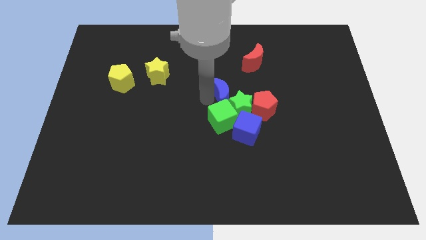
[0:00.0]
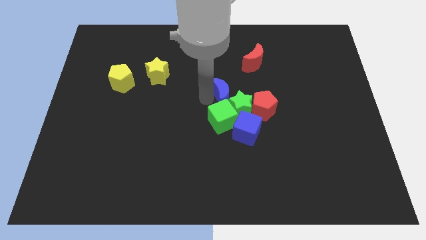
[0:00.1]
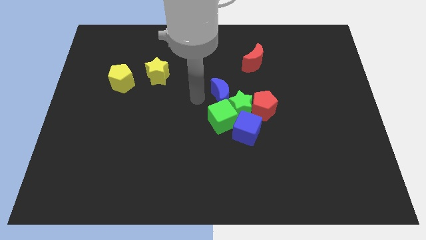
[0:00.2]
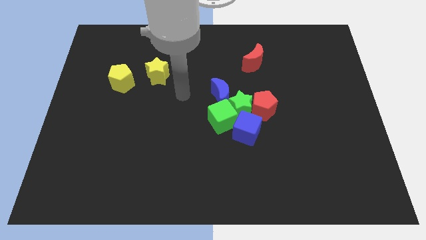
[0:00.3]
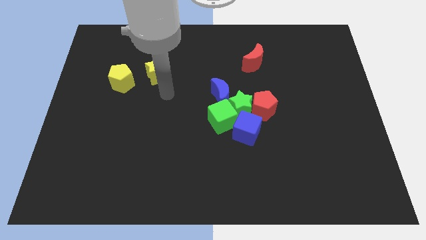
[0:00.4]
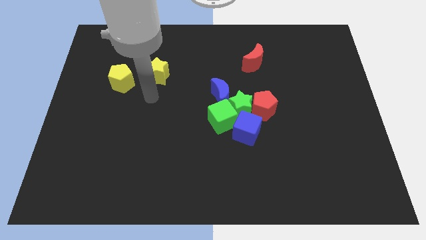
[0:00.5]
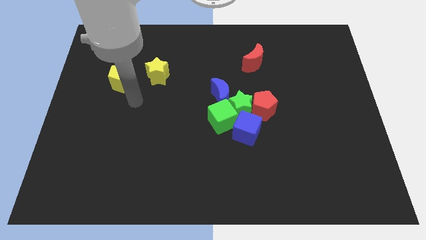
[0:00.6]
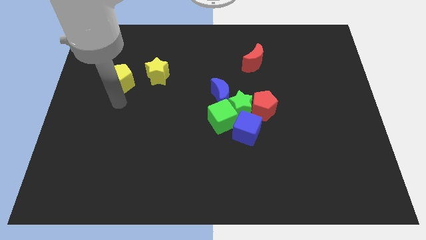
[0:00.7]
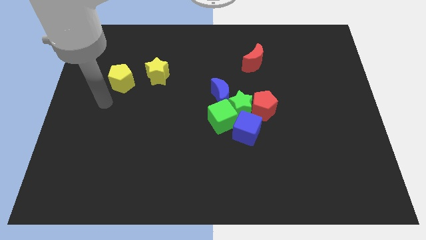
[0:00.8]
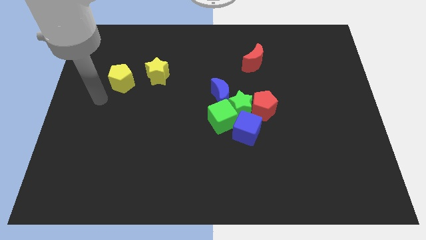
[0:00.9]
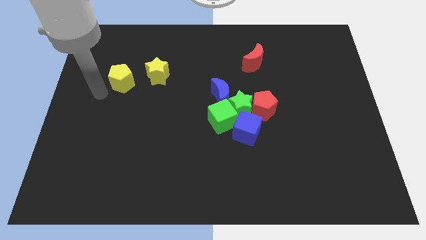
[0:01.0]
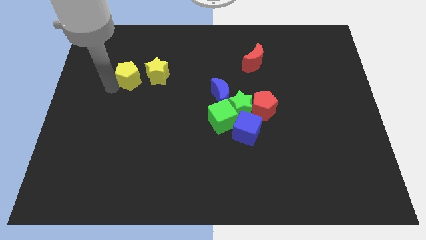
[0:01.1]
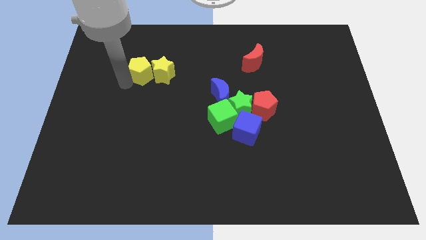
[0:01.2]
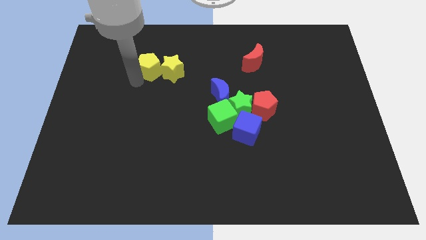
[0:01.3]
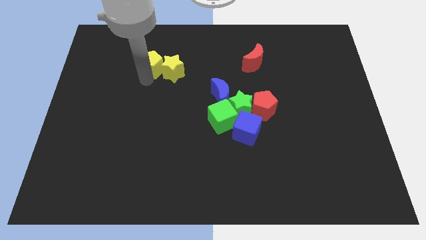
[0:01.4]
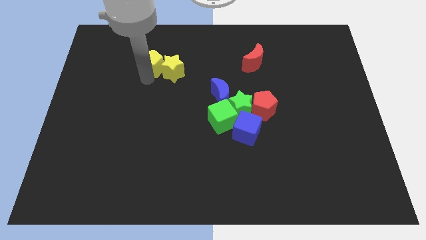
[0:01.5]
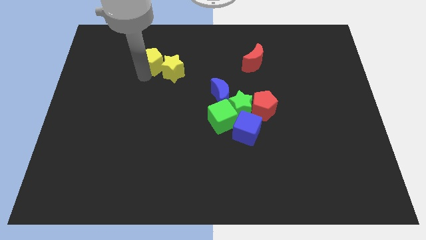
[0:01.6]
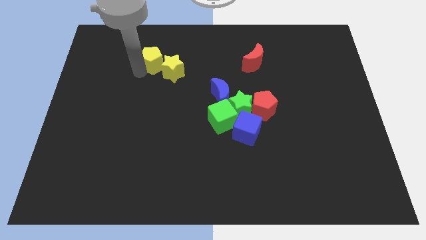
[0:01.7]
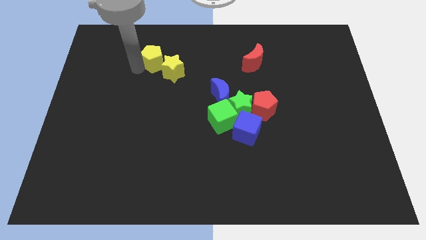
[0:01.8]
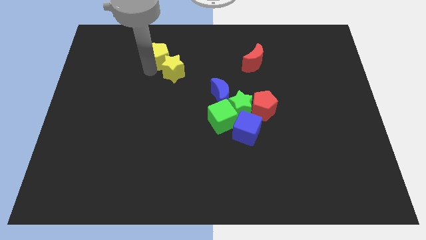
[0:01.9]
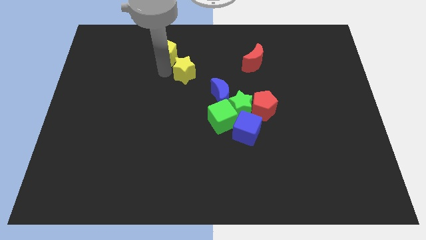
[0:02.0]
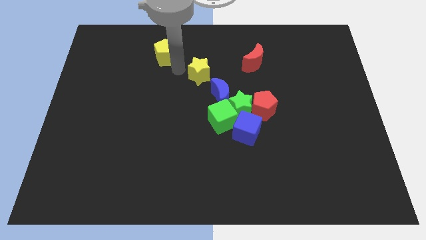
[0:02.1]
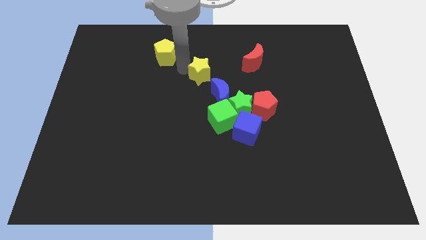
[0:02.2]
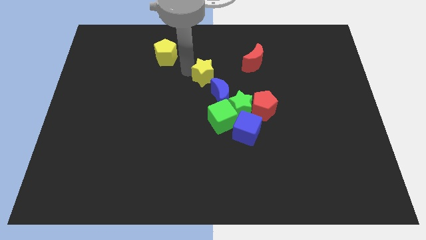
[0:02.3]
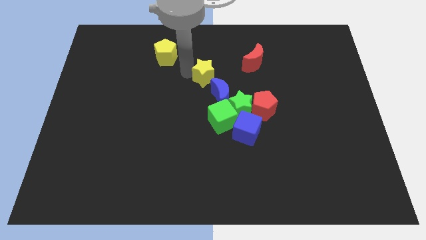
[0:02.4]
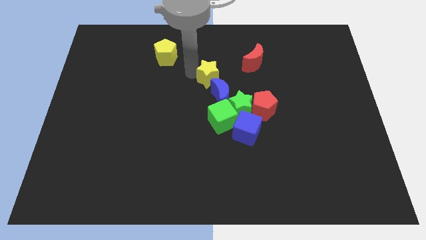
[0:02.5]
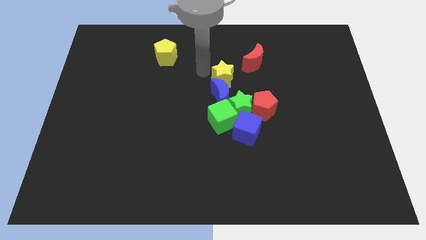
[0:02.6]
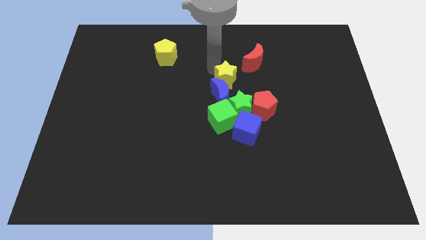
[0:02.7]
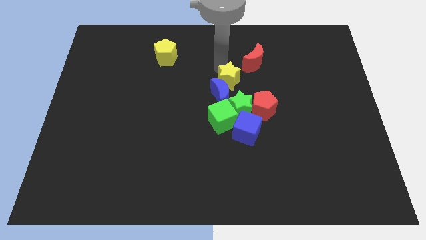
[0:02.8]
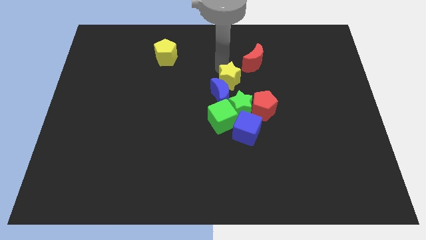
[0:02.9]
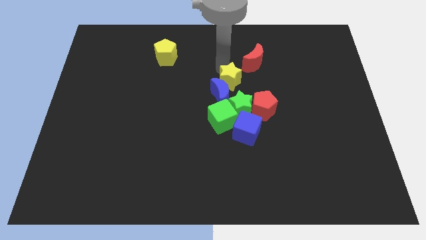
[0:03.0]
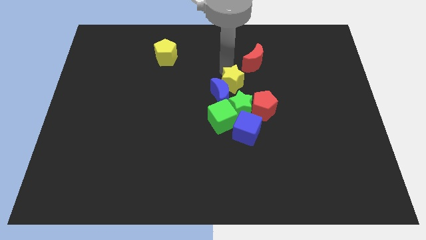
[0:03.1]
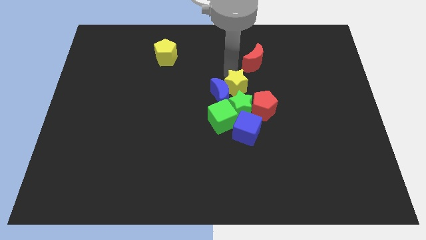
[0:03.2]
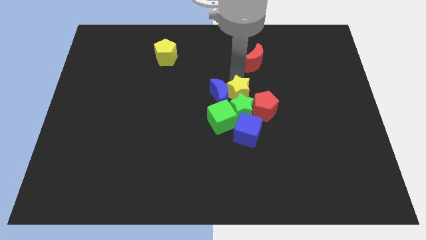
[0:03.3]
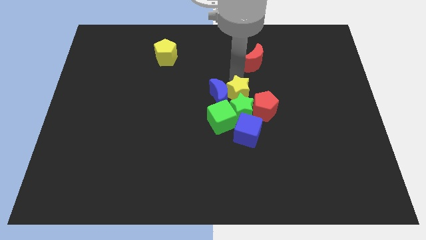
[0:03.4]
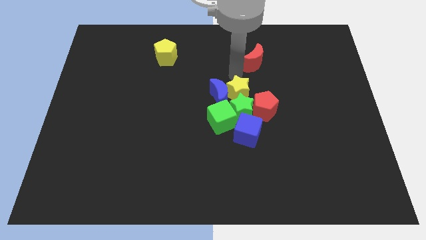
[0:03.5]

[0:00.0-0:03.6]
separate the yellow star from yellow pentagon

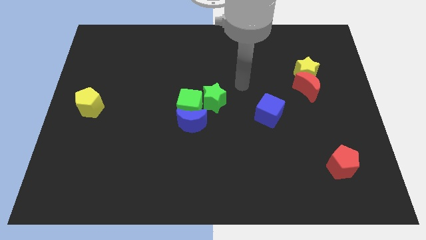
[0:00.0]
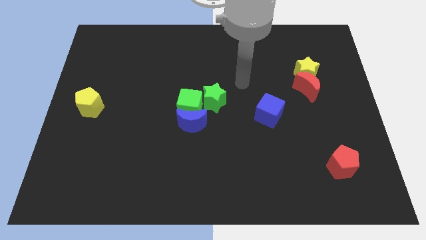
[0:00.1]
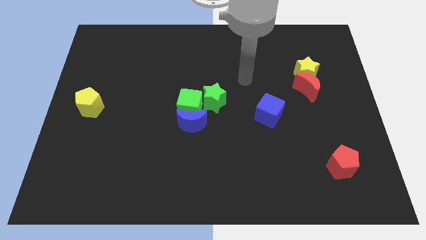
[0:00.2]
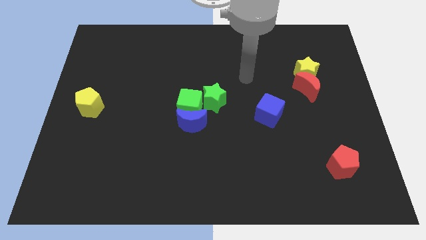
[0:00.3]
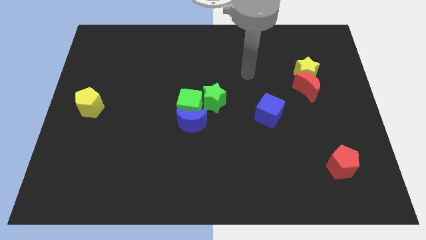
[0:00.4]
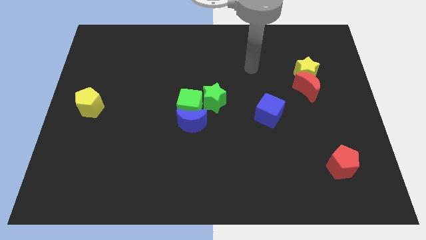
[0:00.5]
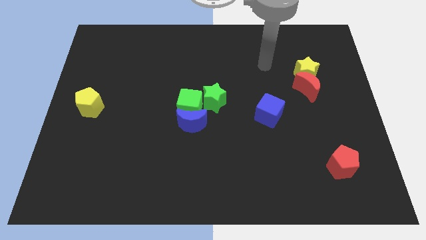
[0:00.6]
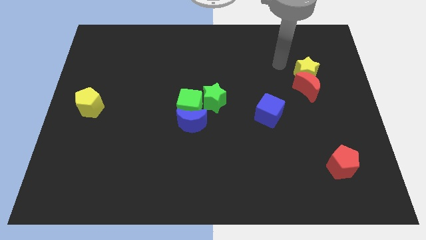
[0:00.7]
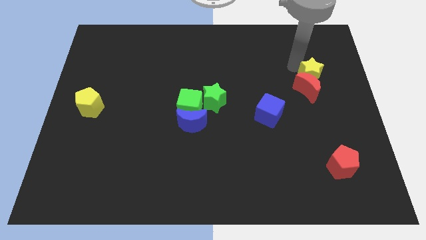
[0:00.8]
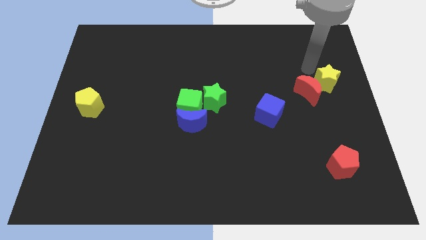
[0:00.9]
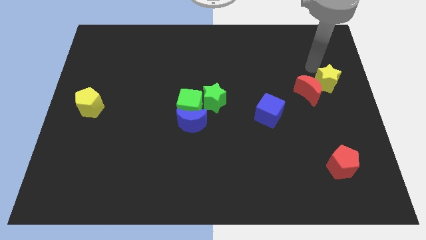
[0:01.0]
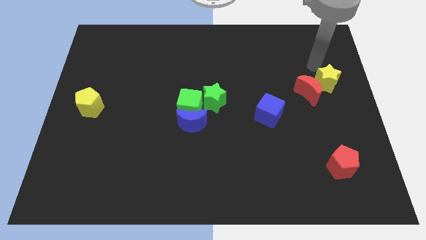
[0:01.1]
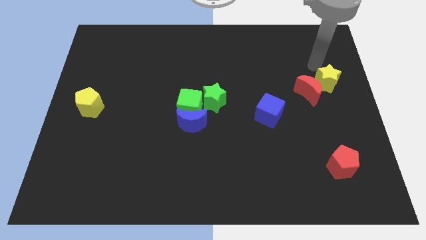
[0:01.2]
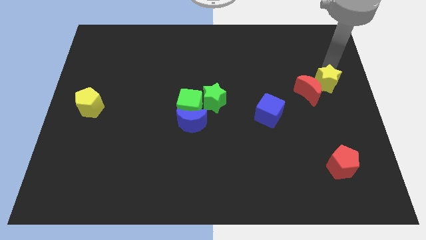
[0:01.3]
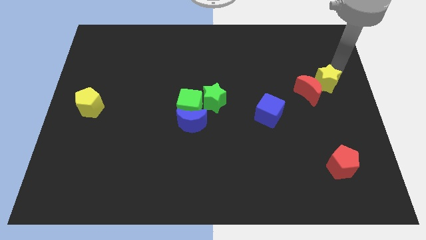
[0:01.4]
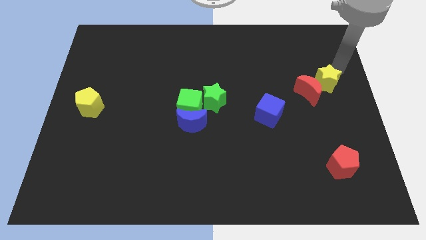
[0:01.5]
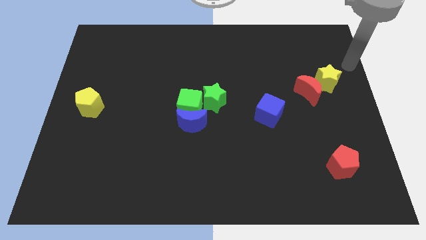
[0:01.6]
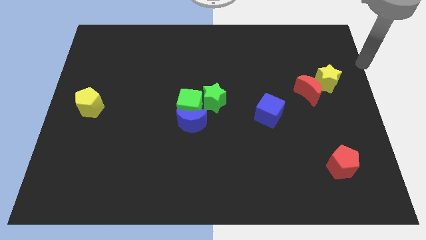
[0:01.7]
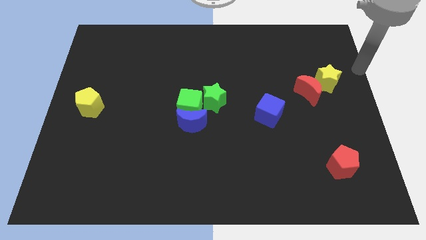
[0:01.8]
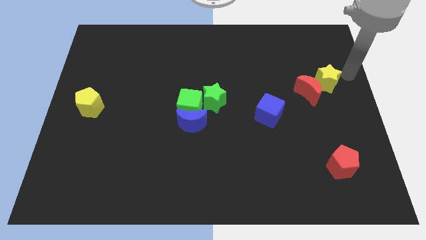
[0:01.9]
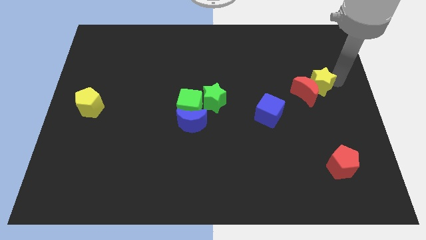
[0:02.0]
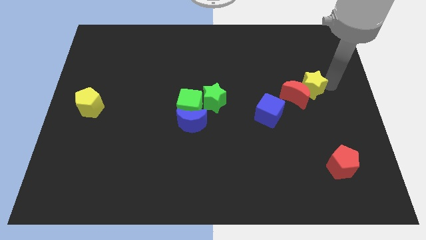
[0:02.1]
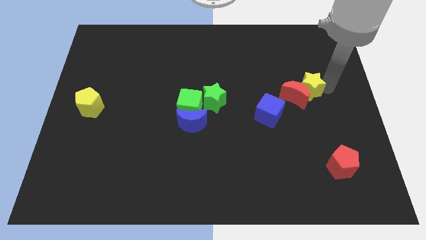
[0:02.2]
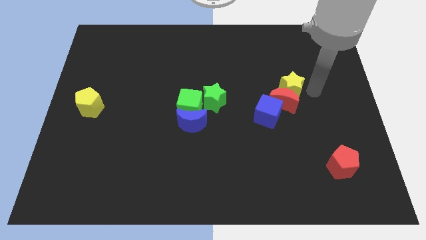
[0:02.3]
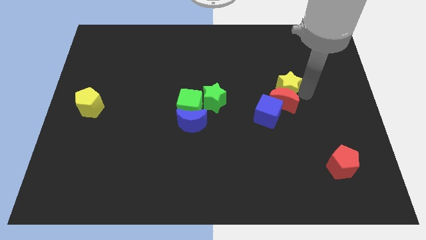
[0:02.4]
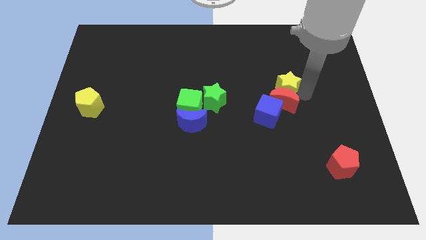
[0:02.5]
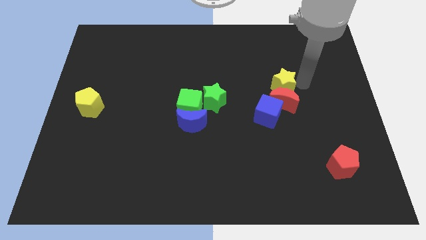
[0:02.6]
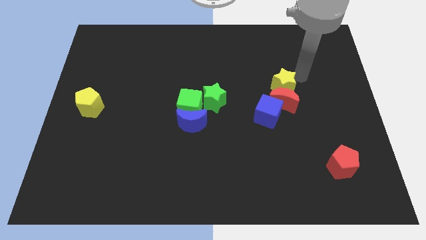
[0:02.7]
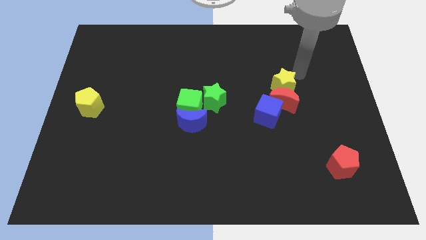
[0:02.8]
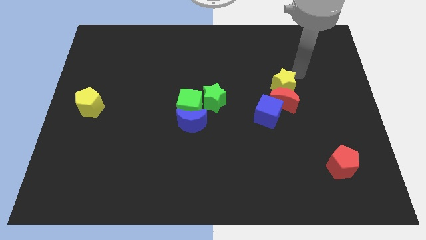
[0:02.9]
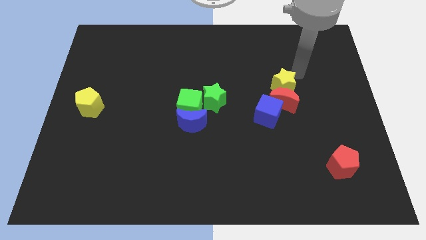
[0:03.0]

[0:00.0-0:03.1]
move yellow star along with red moon to the blue cube

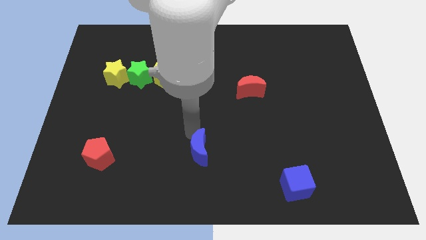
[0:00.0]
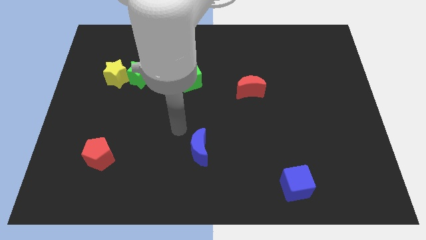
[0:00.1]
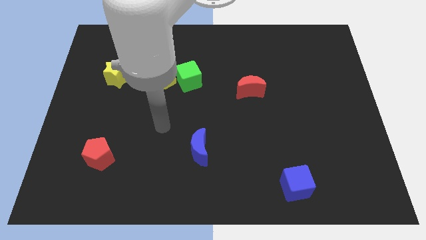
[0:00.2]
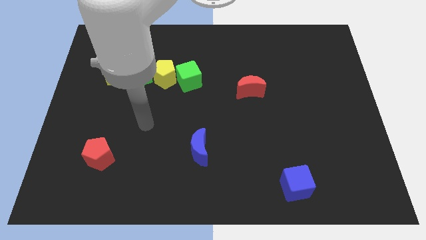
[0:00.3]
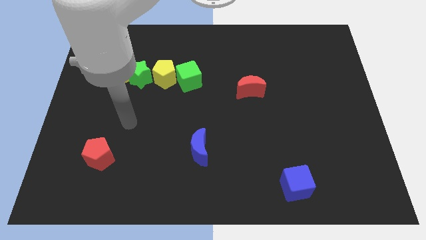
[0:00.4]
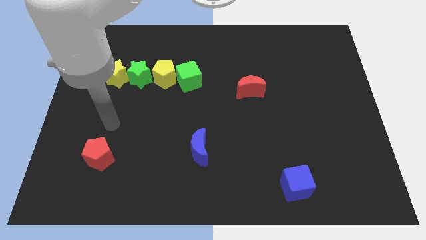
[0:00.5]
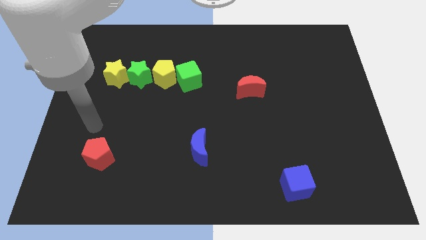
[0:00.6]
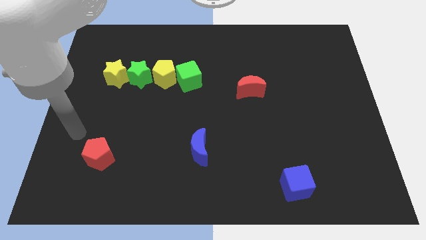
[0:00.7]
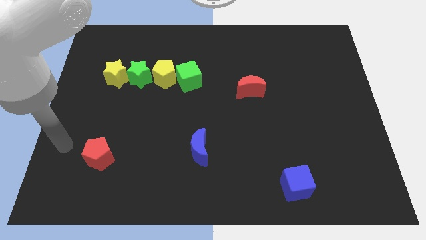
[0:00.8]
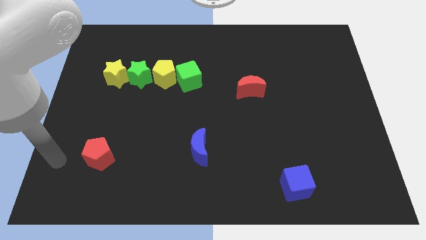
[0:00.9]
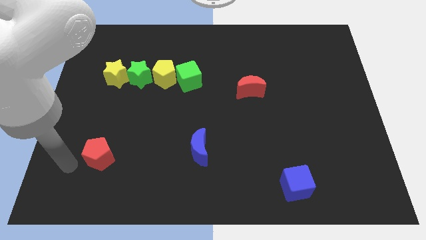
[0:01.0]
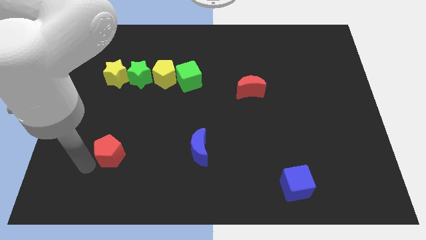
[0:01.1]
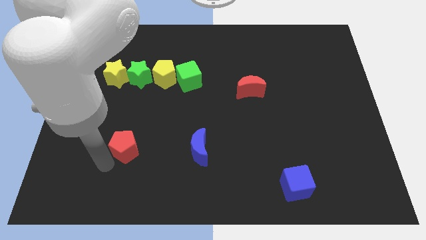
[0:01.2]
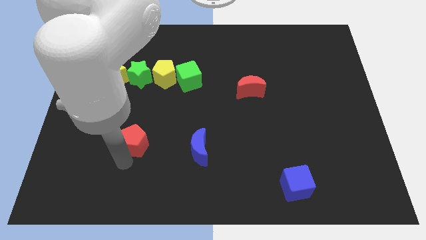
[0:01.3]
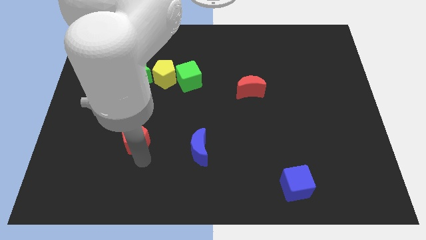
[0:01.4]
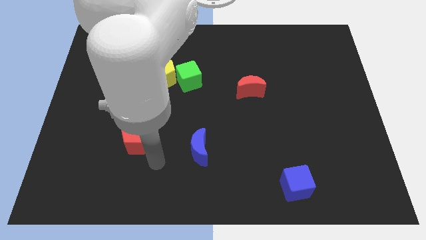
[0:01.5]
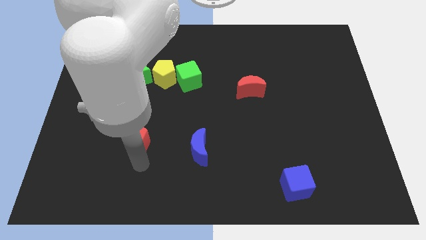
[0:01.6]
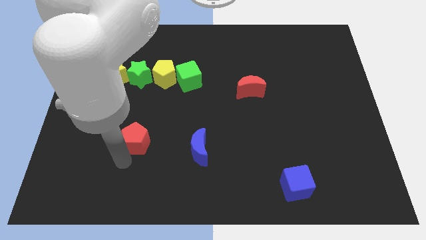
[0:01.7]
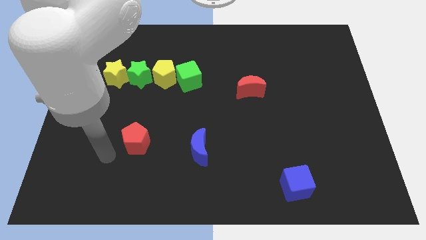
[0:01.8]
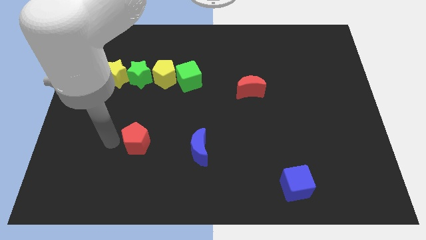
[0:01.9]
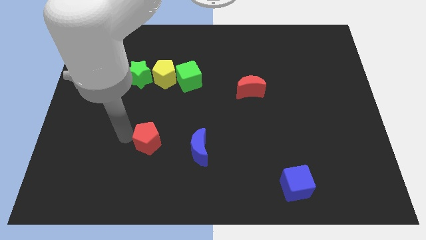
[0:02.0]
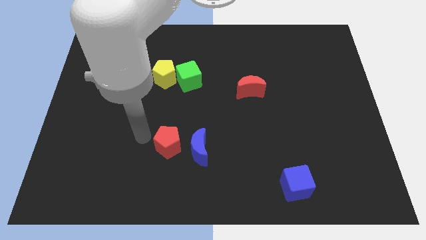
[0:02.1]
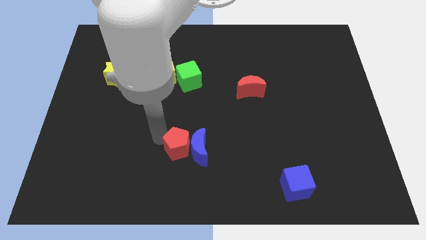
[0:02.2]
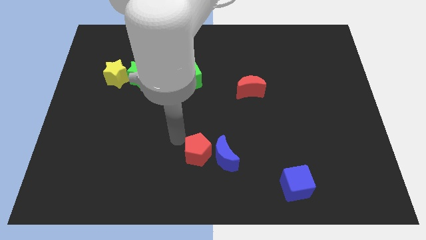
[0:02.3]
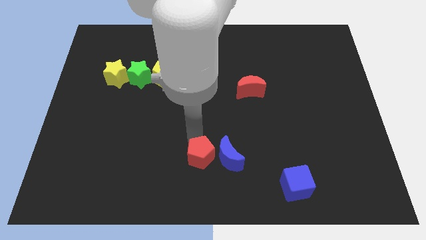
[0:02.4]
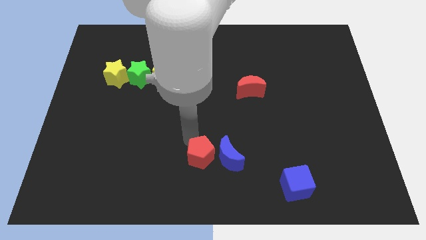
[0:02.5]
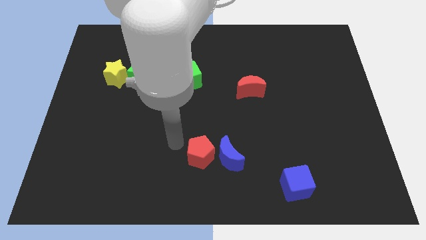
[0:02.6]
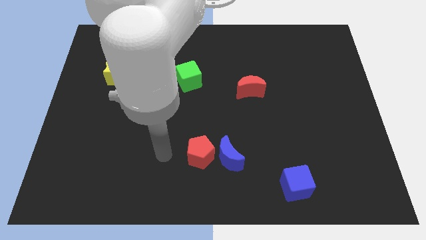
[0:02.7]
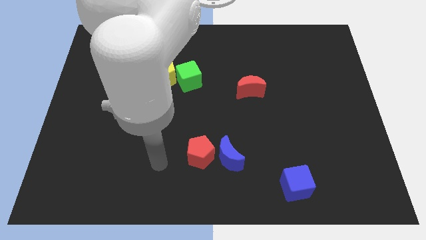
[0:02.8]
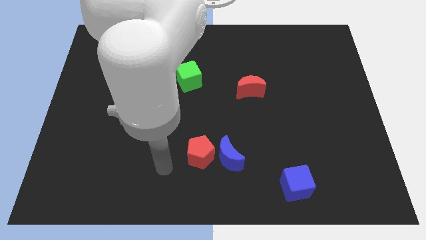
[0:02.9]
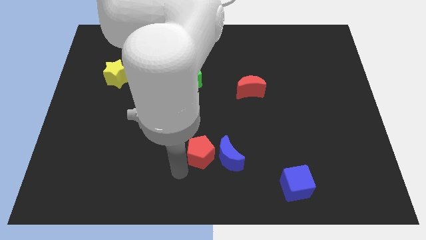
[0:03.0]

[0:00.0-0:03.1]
push the red pentagon towards the blue moon
